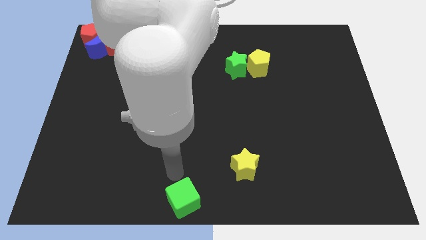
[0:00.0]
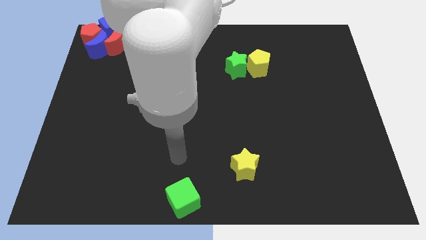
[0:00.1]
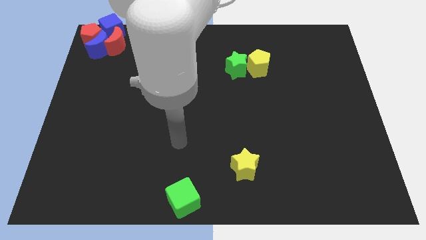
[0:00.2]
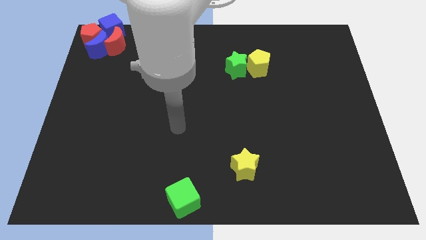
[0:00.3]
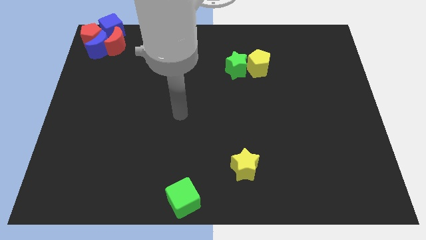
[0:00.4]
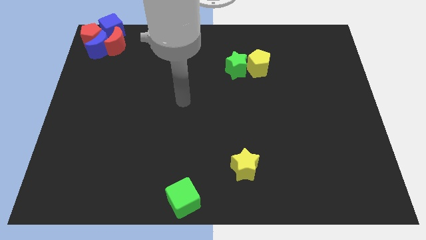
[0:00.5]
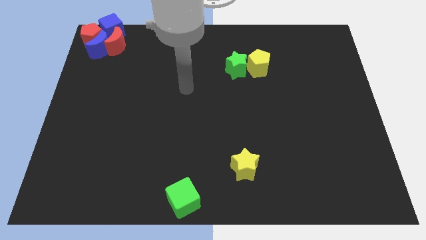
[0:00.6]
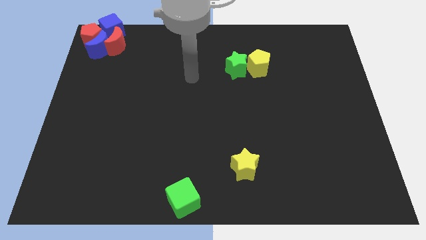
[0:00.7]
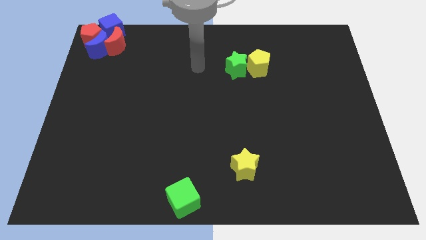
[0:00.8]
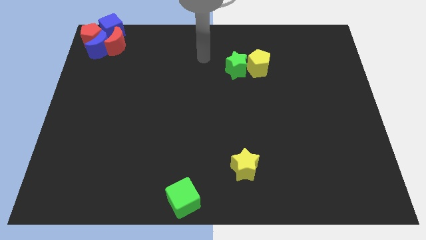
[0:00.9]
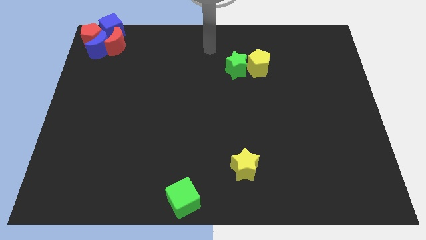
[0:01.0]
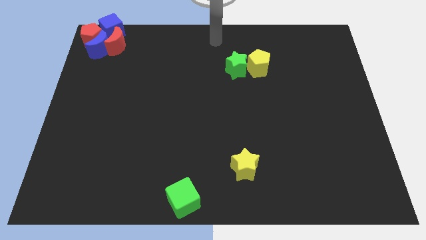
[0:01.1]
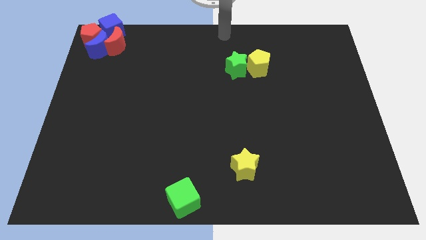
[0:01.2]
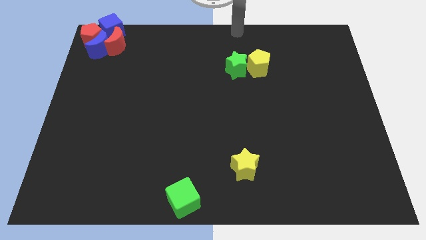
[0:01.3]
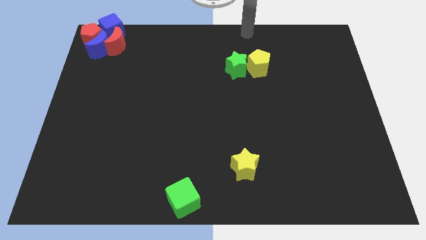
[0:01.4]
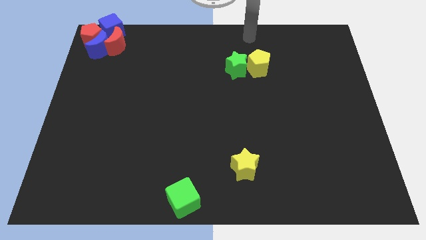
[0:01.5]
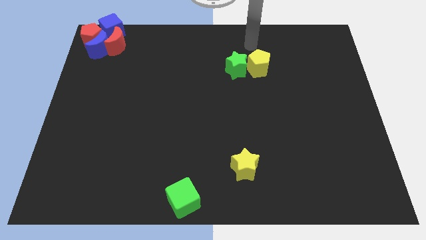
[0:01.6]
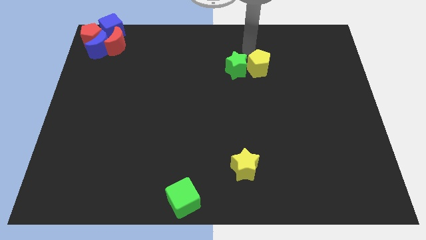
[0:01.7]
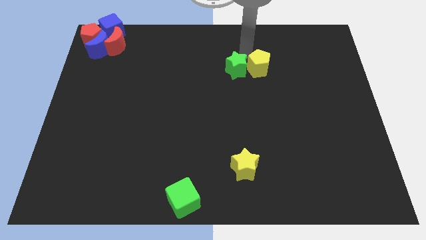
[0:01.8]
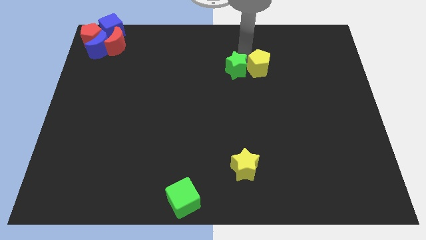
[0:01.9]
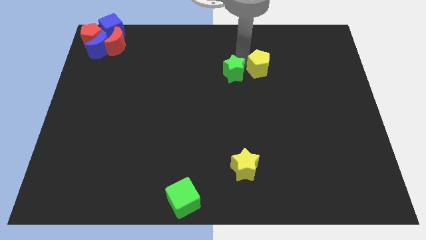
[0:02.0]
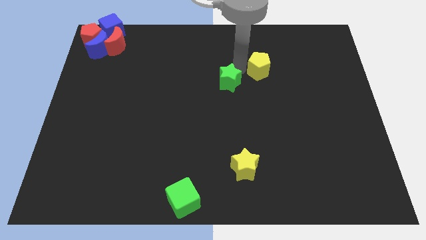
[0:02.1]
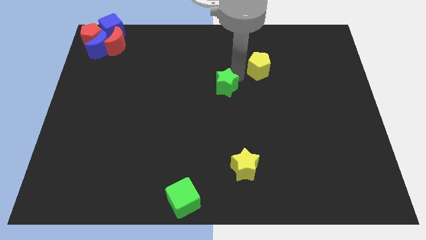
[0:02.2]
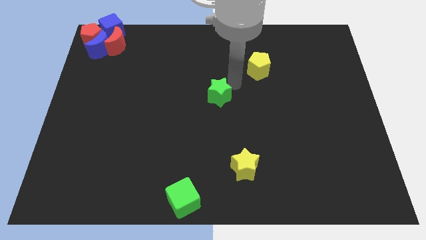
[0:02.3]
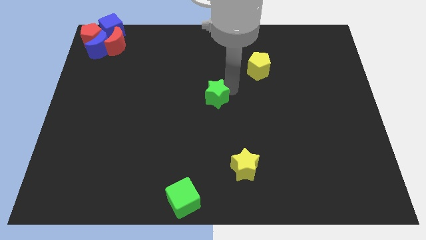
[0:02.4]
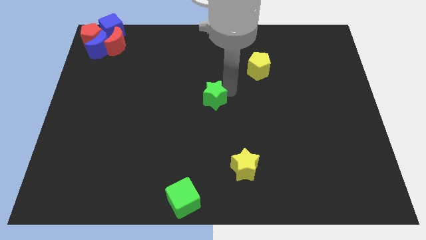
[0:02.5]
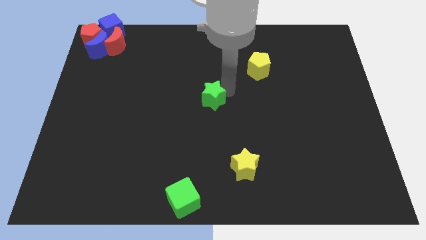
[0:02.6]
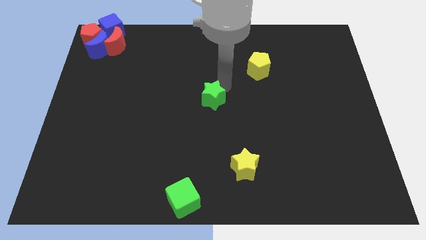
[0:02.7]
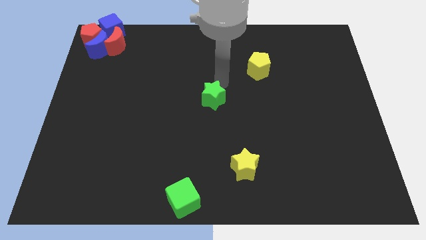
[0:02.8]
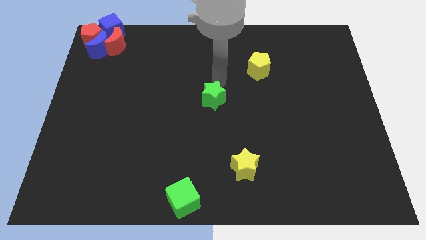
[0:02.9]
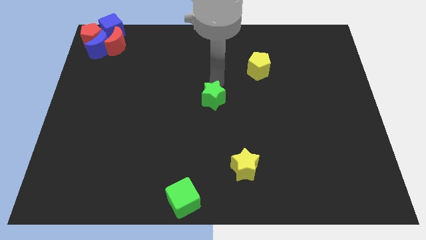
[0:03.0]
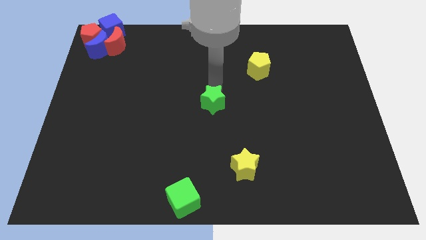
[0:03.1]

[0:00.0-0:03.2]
move your arm and separate the green star at the center

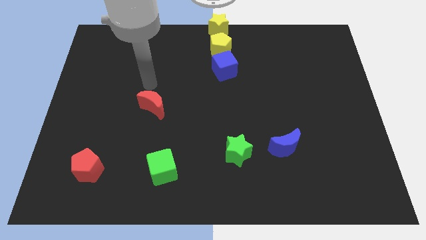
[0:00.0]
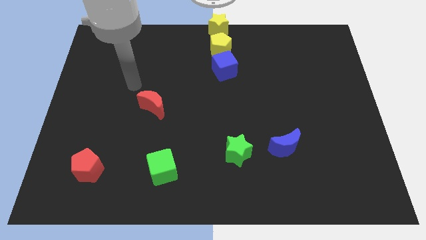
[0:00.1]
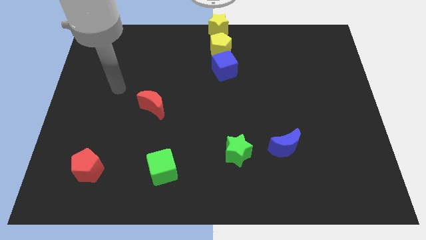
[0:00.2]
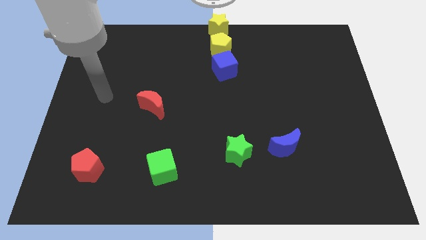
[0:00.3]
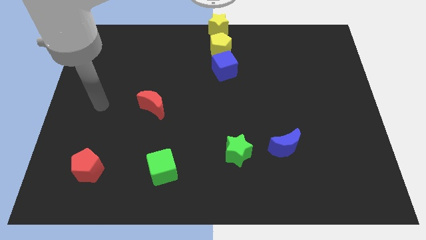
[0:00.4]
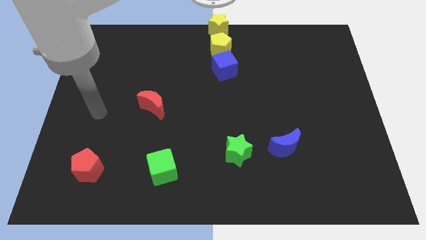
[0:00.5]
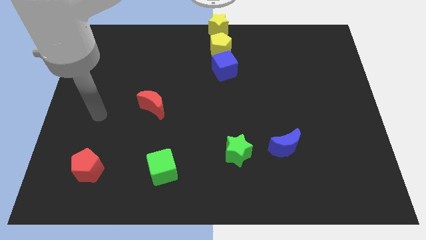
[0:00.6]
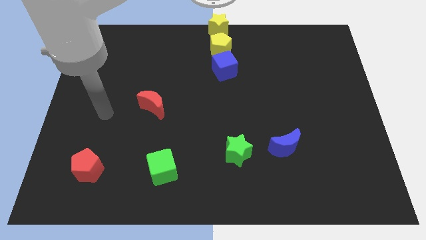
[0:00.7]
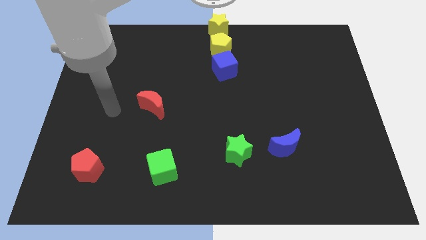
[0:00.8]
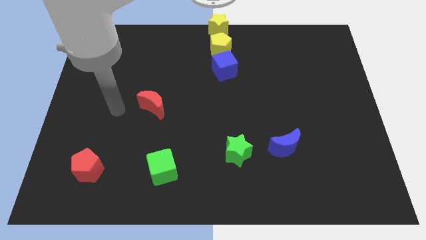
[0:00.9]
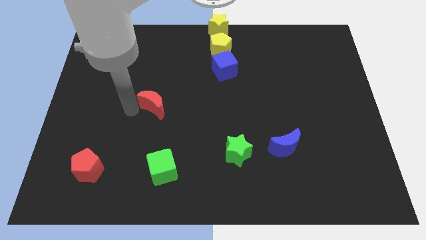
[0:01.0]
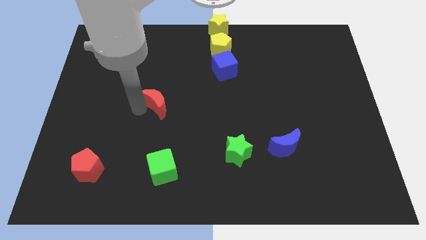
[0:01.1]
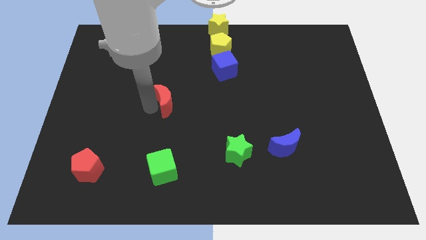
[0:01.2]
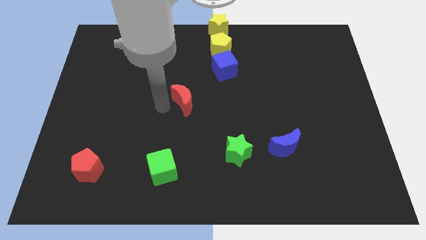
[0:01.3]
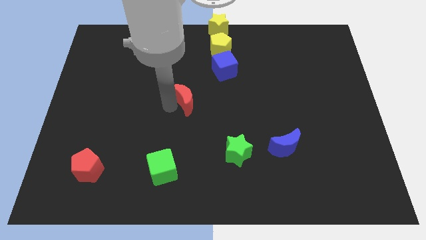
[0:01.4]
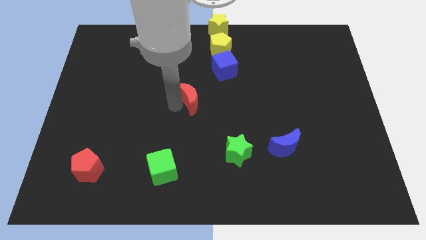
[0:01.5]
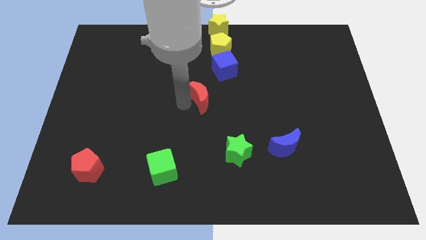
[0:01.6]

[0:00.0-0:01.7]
slide the red moon diagonally top right to the green cube

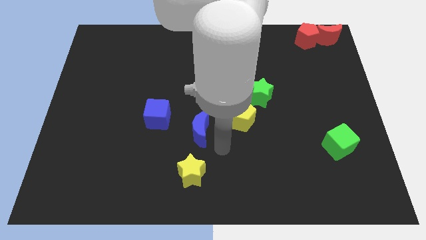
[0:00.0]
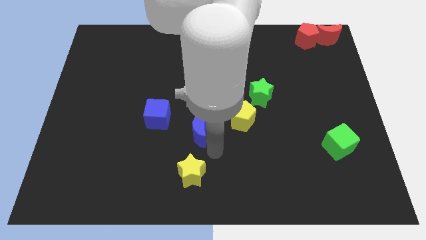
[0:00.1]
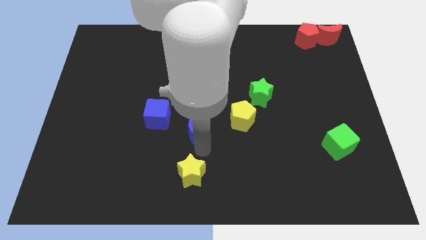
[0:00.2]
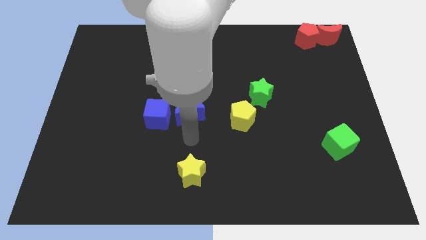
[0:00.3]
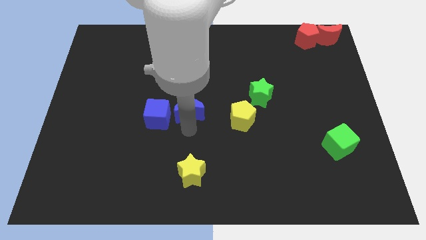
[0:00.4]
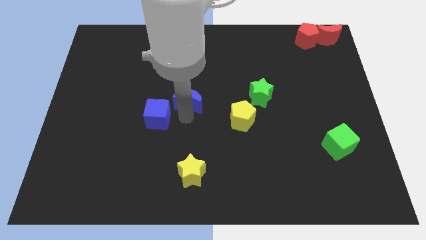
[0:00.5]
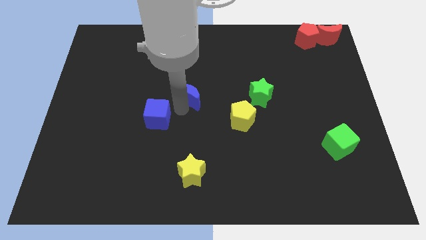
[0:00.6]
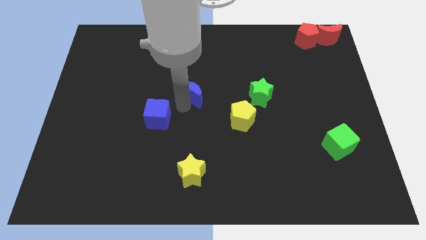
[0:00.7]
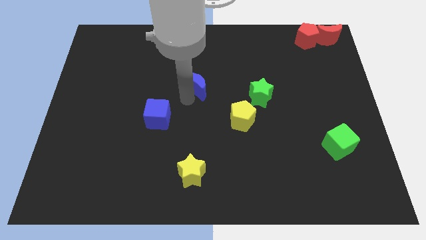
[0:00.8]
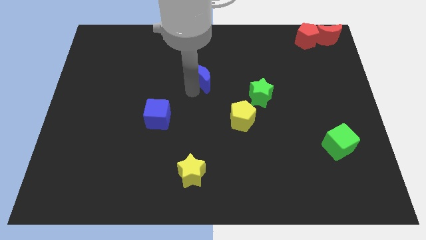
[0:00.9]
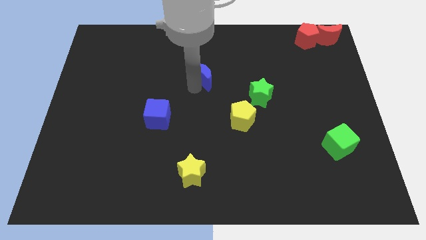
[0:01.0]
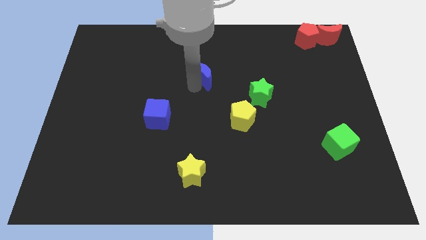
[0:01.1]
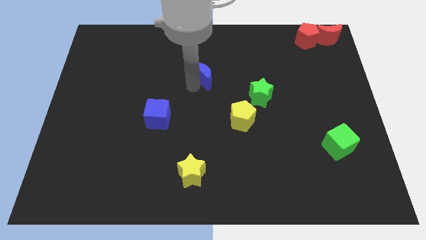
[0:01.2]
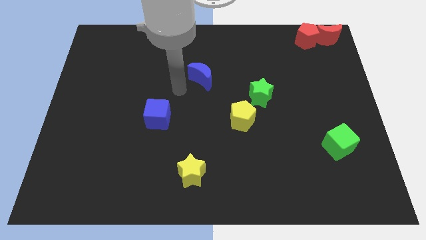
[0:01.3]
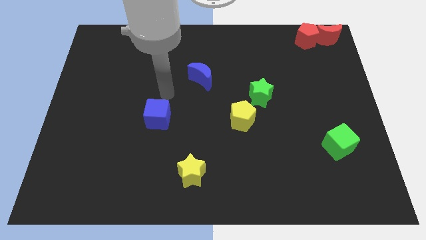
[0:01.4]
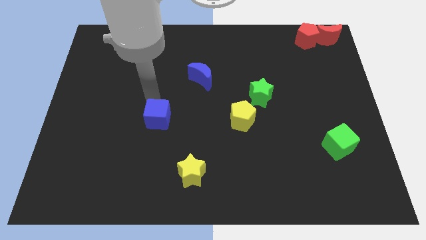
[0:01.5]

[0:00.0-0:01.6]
slightly push the blue moon upwards

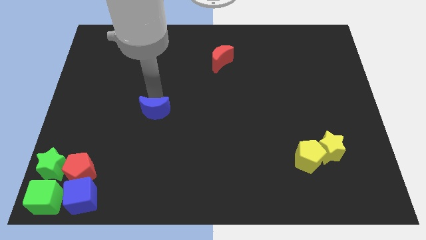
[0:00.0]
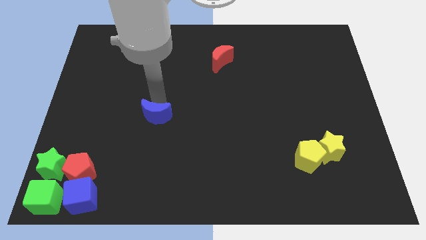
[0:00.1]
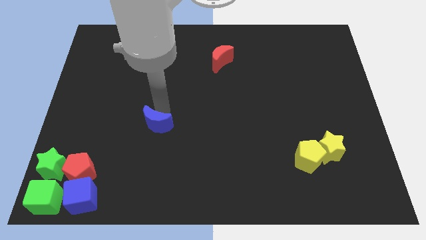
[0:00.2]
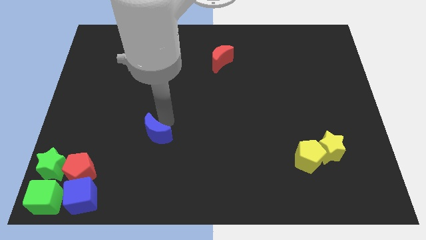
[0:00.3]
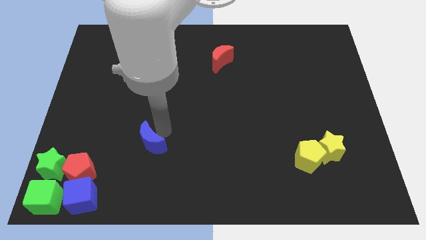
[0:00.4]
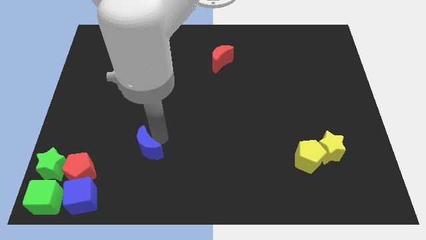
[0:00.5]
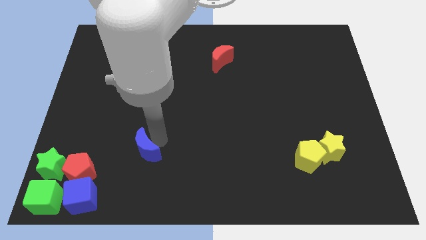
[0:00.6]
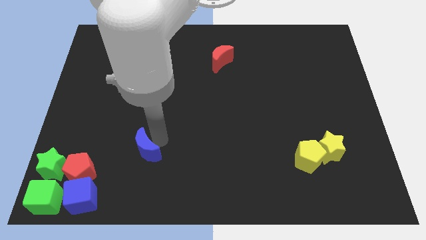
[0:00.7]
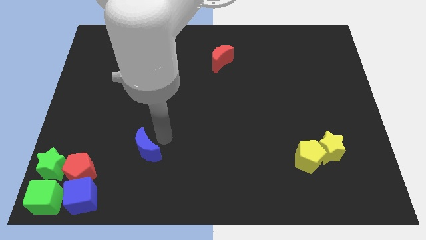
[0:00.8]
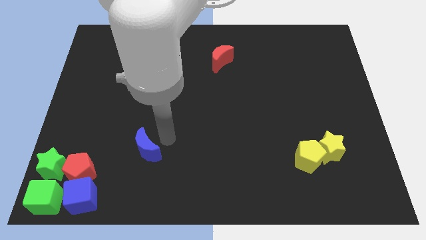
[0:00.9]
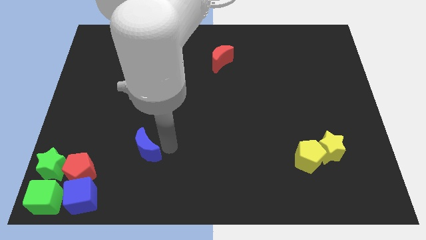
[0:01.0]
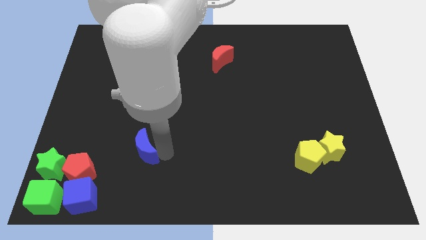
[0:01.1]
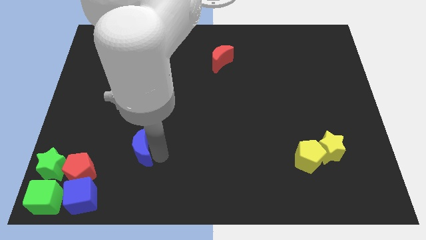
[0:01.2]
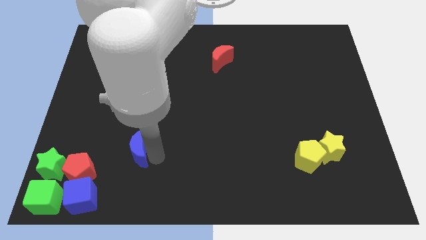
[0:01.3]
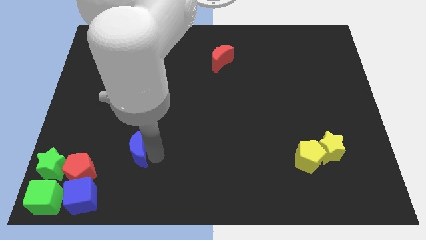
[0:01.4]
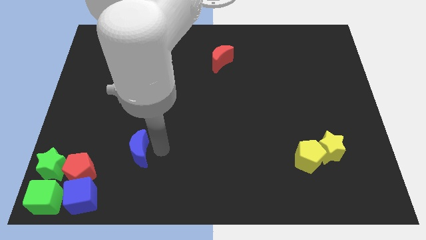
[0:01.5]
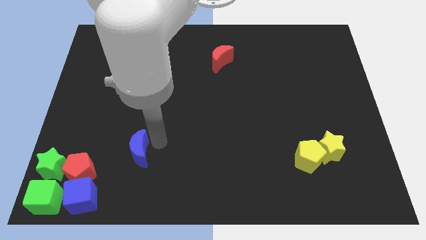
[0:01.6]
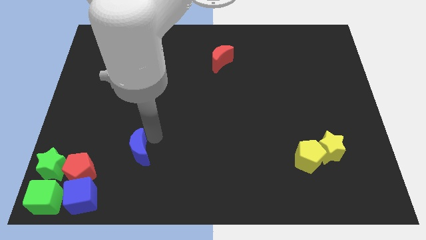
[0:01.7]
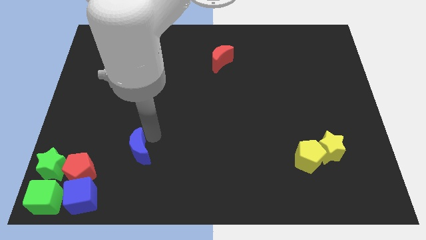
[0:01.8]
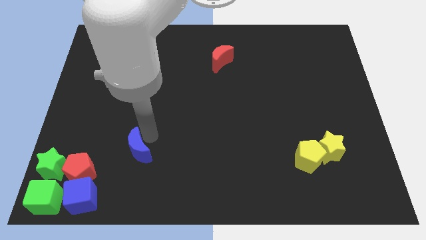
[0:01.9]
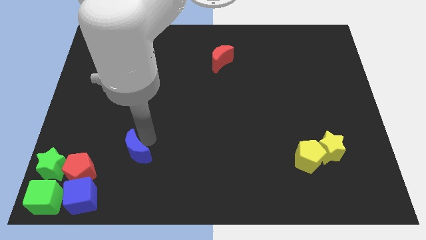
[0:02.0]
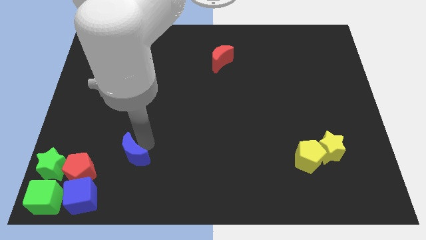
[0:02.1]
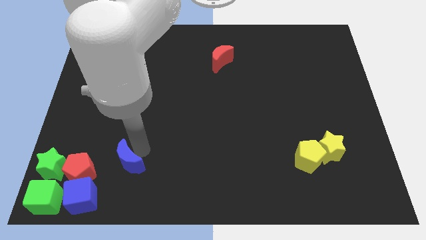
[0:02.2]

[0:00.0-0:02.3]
push the blue crescent towards the red pentagon
